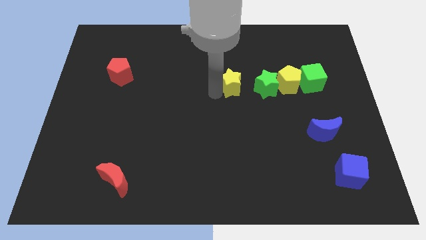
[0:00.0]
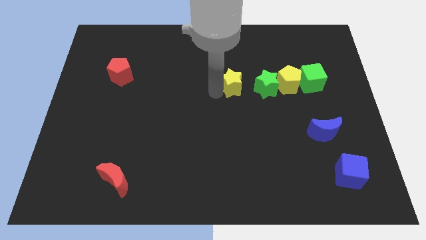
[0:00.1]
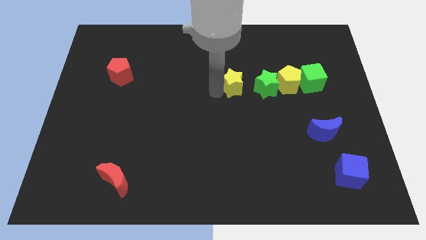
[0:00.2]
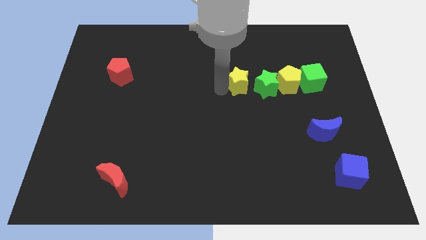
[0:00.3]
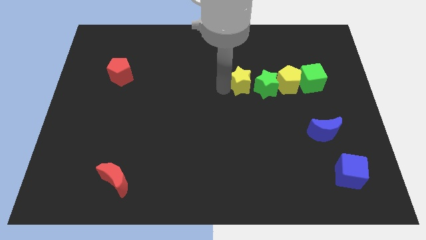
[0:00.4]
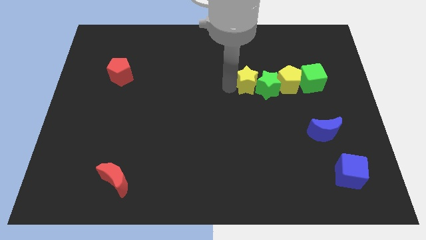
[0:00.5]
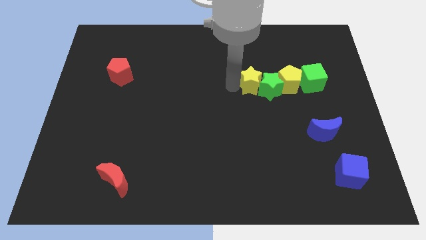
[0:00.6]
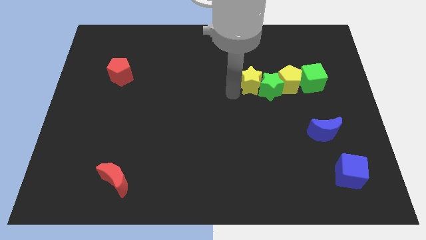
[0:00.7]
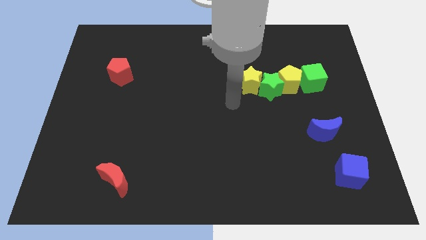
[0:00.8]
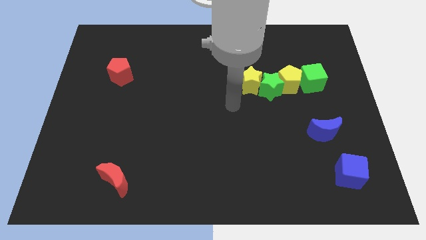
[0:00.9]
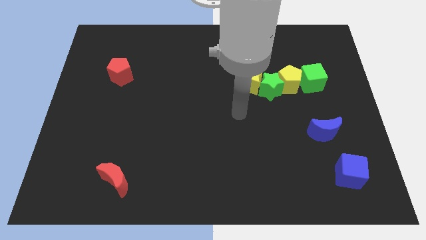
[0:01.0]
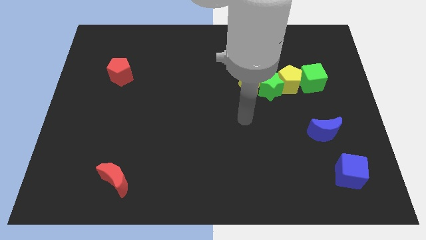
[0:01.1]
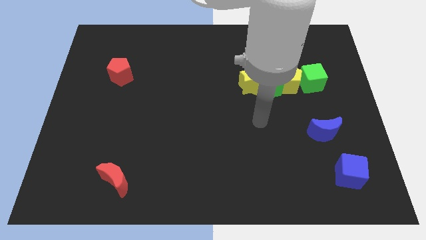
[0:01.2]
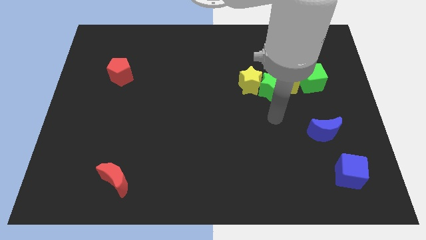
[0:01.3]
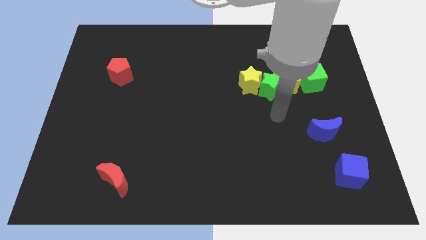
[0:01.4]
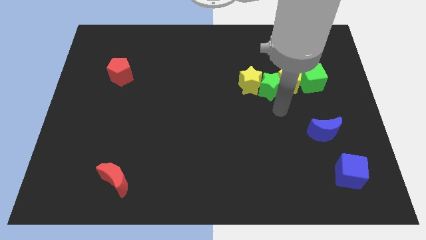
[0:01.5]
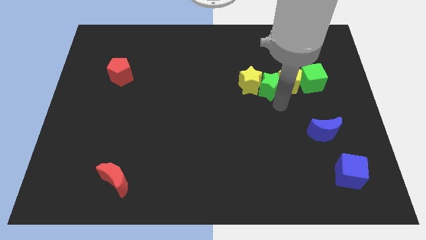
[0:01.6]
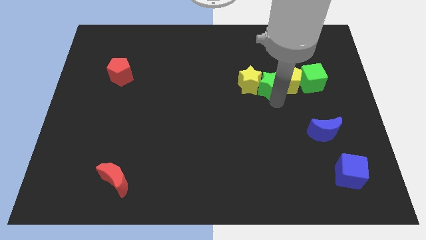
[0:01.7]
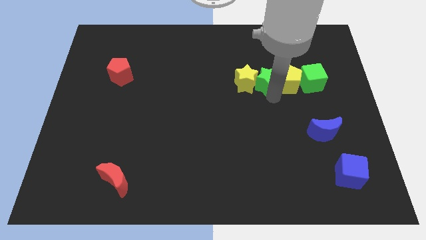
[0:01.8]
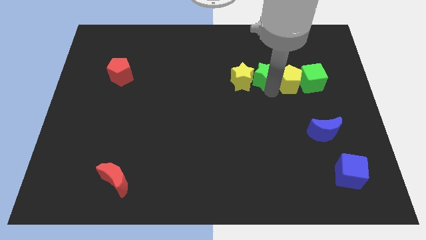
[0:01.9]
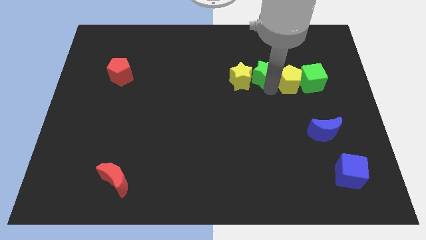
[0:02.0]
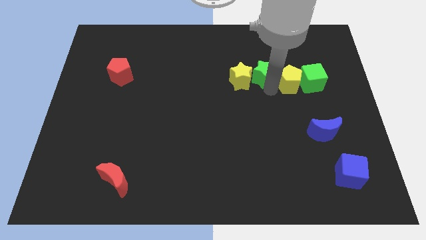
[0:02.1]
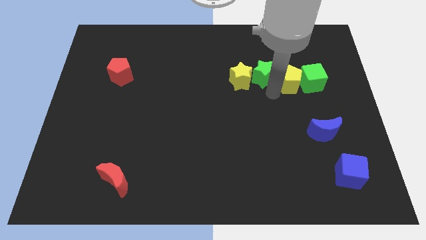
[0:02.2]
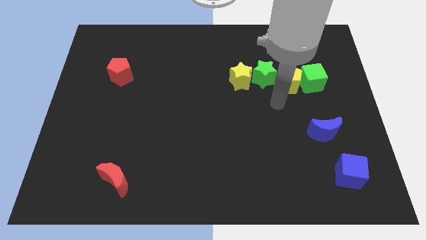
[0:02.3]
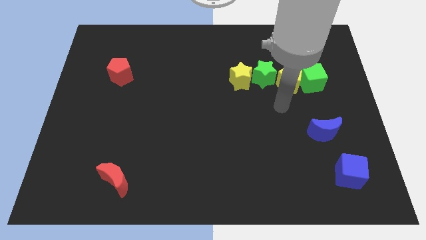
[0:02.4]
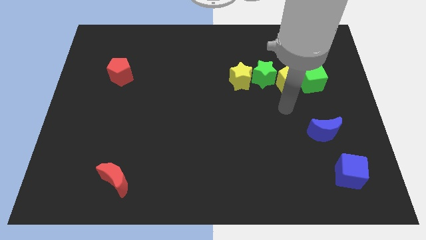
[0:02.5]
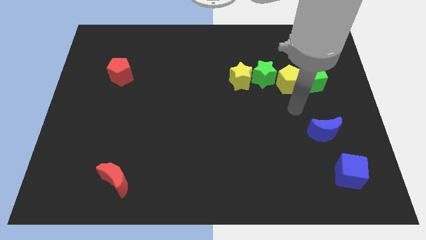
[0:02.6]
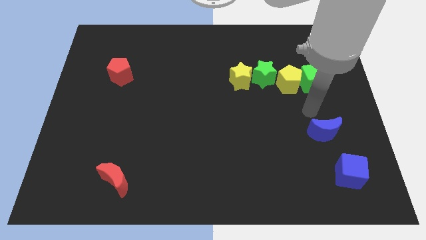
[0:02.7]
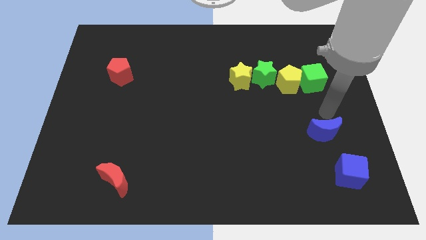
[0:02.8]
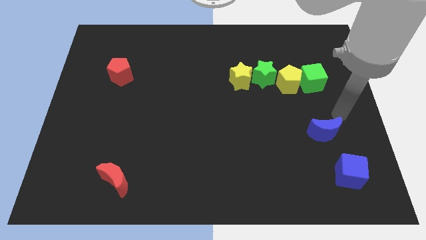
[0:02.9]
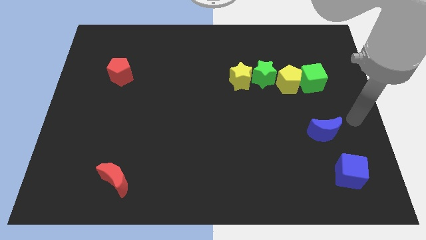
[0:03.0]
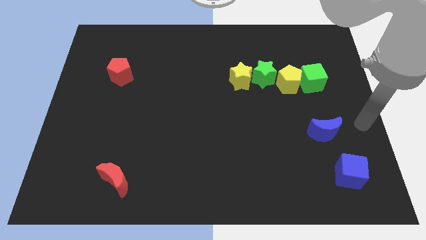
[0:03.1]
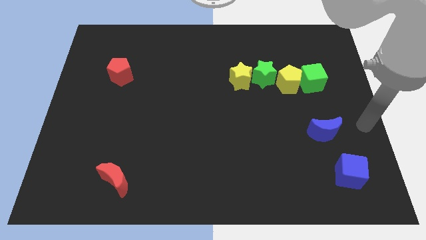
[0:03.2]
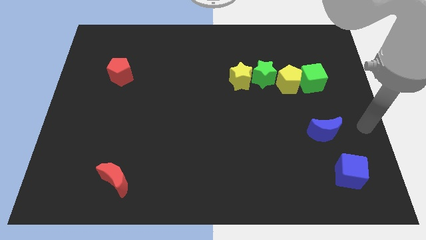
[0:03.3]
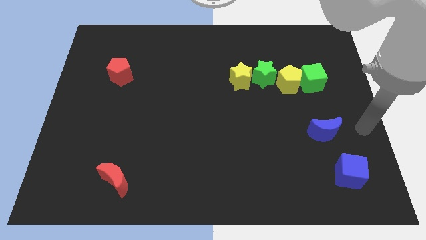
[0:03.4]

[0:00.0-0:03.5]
move your arm to the right of the blue crescent

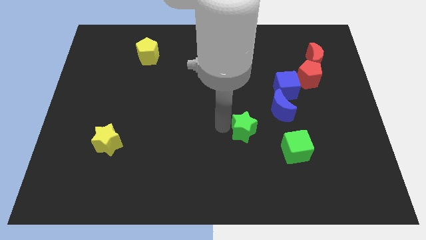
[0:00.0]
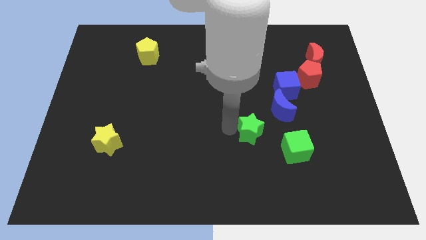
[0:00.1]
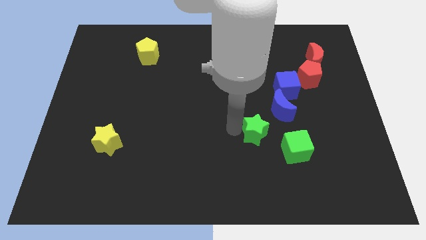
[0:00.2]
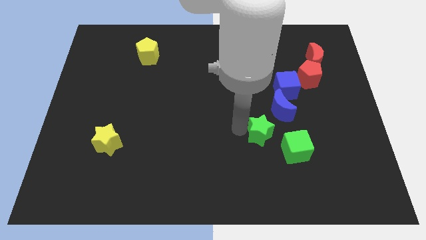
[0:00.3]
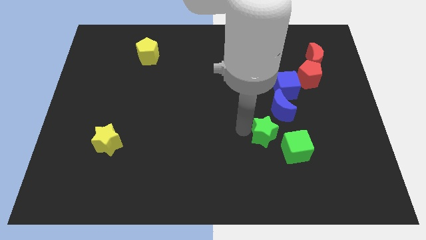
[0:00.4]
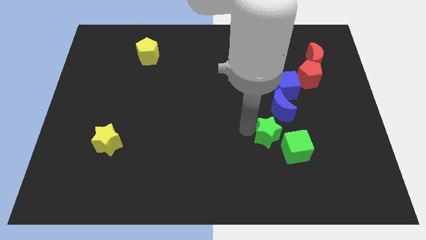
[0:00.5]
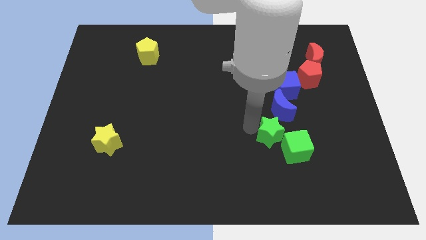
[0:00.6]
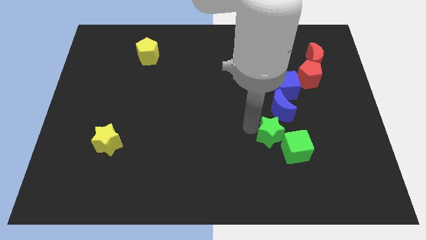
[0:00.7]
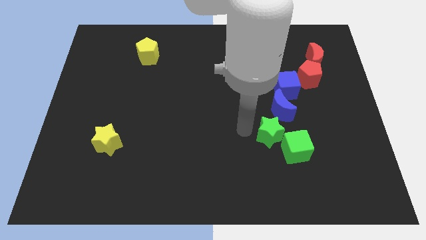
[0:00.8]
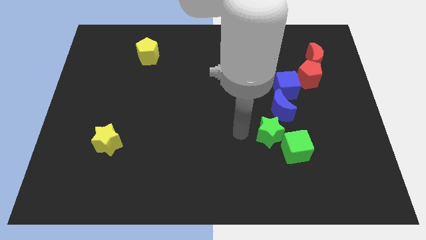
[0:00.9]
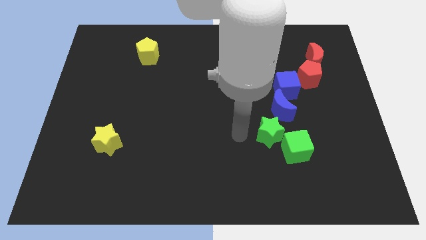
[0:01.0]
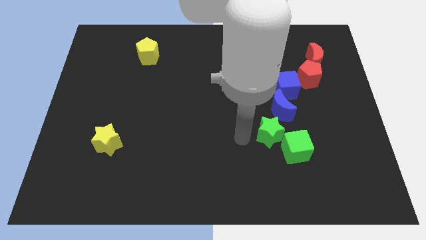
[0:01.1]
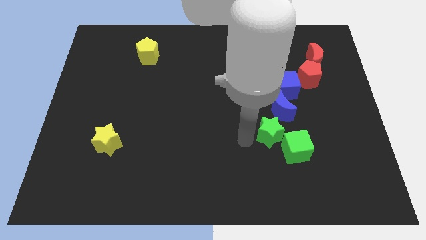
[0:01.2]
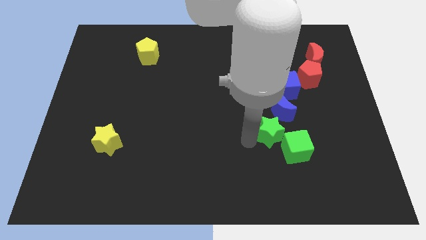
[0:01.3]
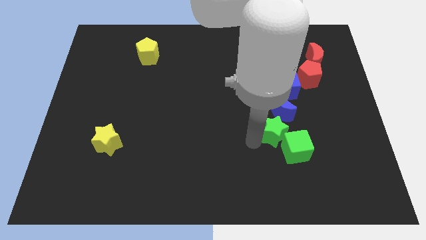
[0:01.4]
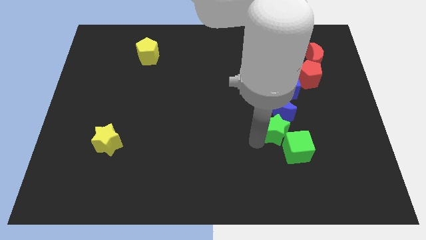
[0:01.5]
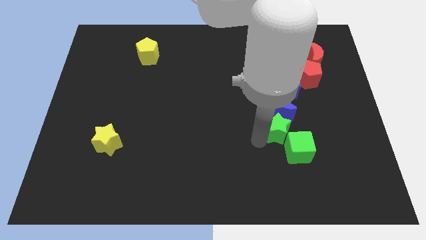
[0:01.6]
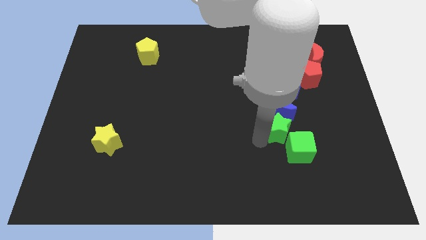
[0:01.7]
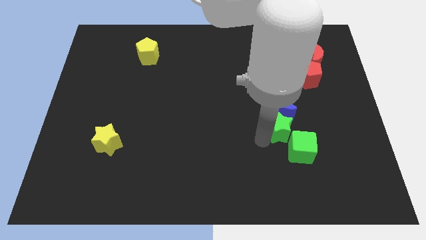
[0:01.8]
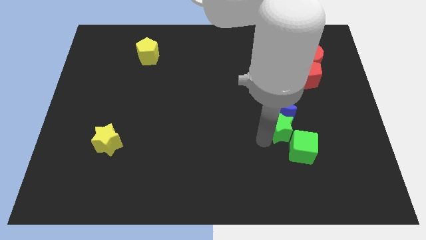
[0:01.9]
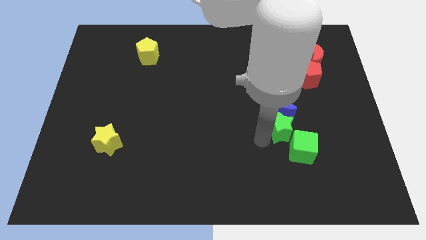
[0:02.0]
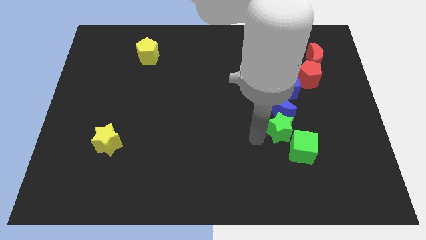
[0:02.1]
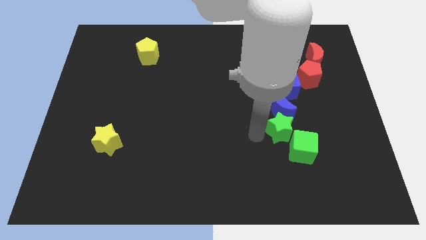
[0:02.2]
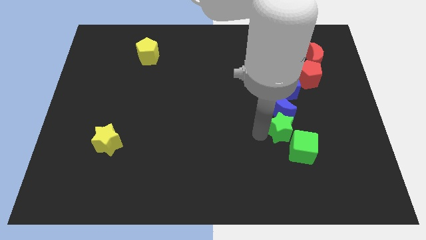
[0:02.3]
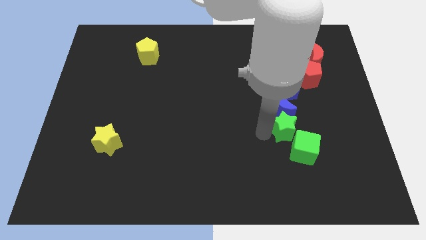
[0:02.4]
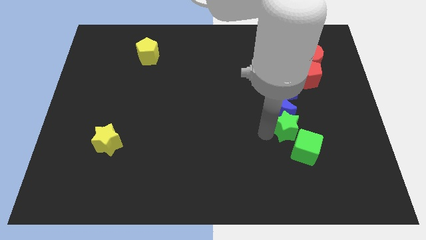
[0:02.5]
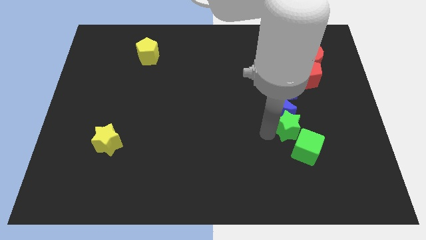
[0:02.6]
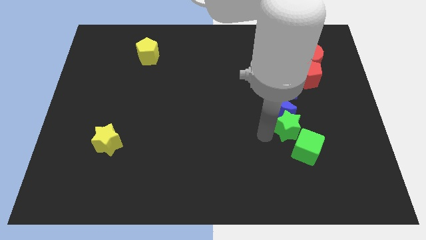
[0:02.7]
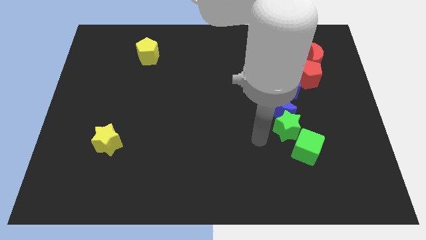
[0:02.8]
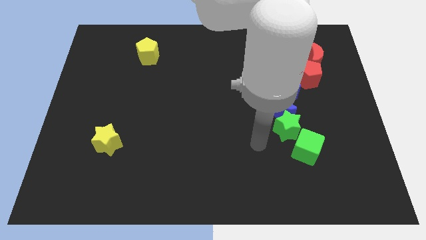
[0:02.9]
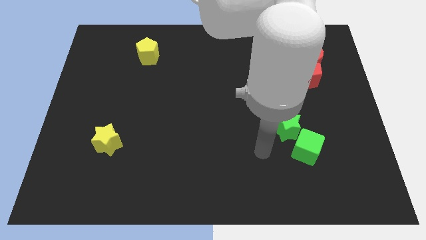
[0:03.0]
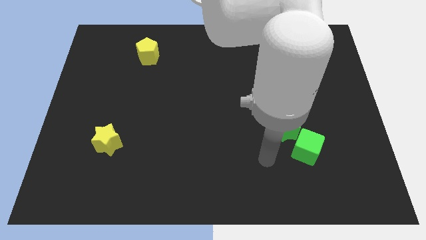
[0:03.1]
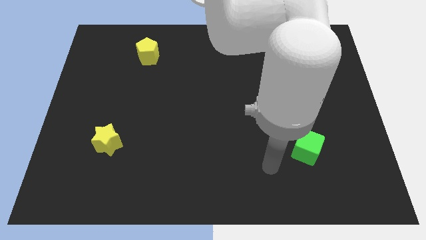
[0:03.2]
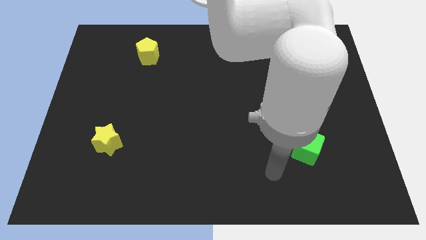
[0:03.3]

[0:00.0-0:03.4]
place the green star vertically below the blue moon

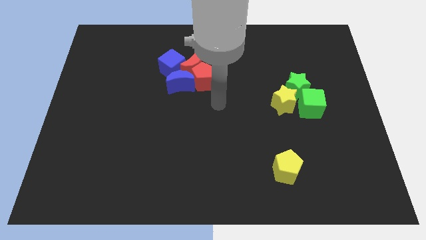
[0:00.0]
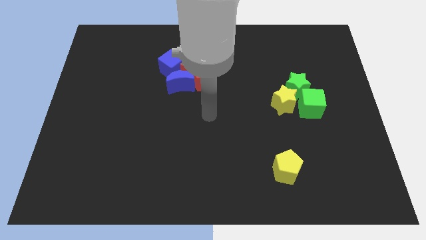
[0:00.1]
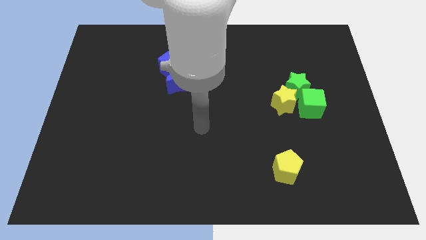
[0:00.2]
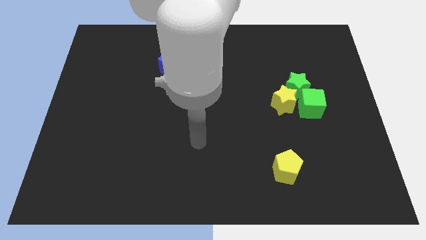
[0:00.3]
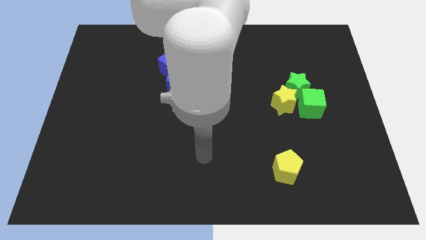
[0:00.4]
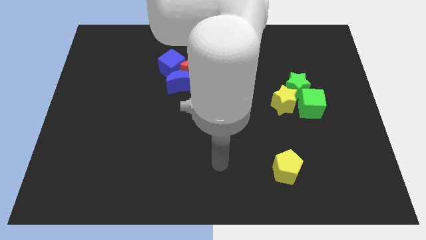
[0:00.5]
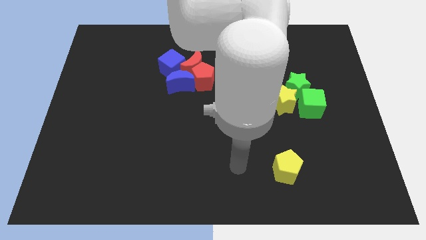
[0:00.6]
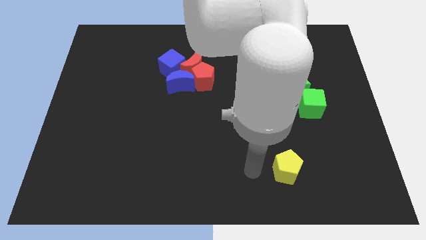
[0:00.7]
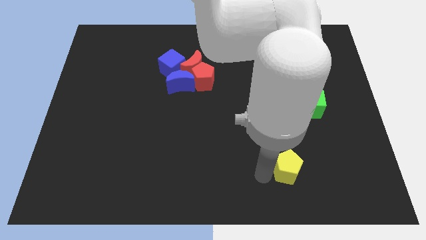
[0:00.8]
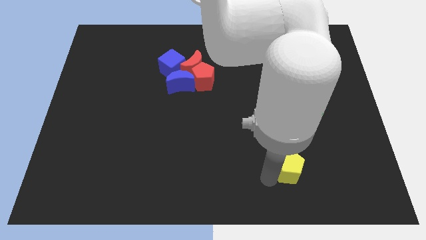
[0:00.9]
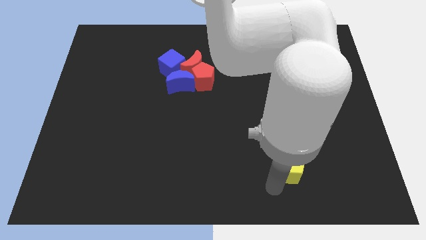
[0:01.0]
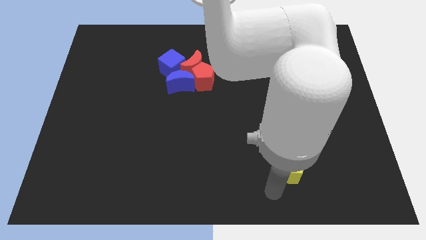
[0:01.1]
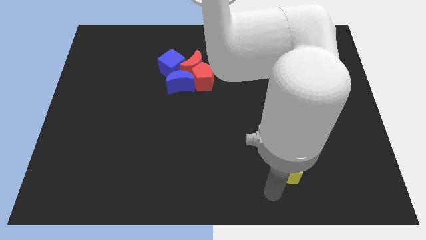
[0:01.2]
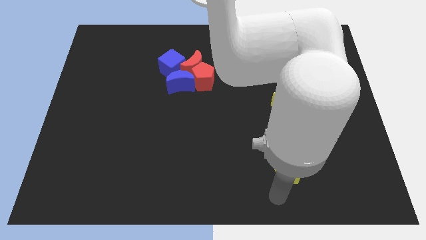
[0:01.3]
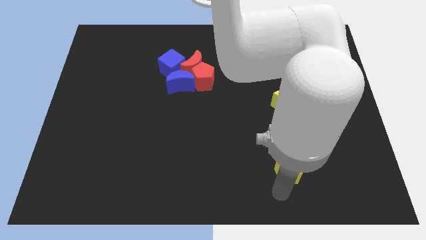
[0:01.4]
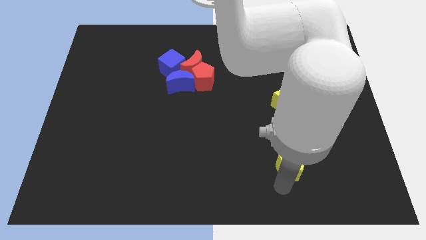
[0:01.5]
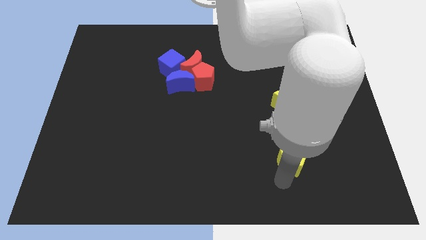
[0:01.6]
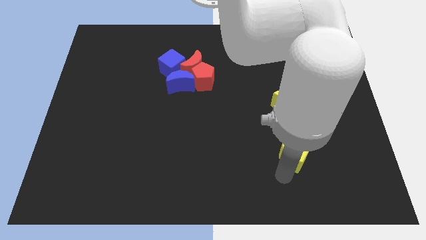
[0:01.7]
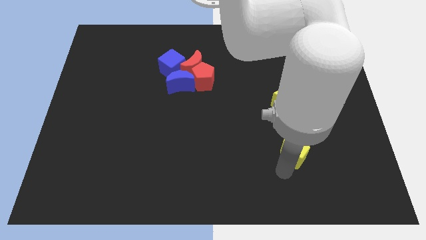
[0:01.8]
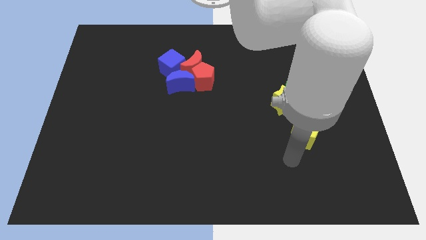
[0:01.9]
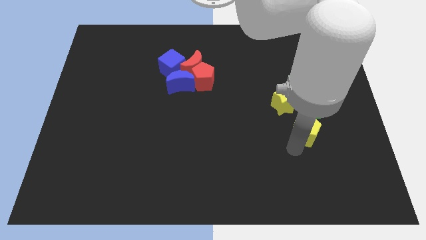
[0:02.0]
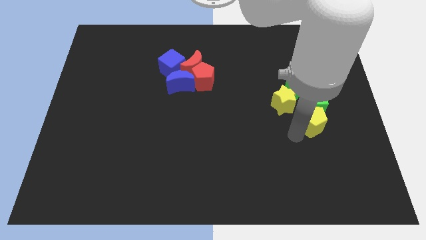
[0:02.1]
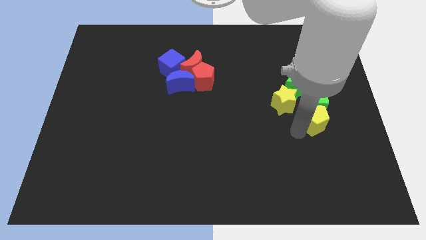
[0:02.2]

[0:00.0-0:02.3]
push the yellow pentagon to the bottom of the green cube
